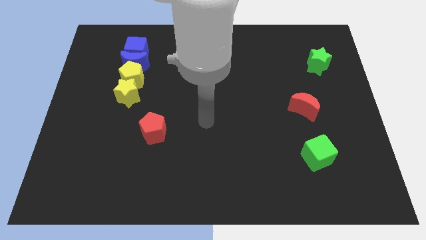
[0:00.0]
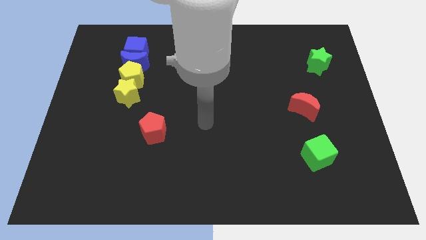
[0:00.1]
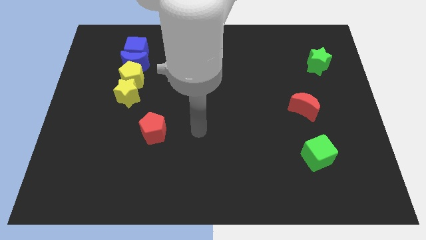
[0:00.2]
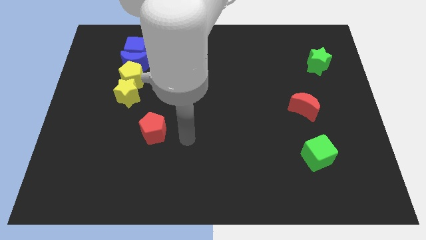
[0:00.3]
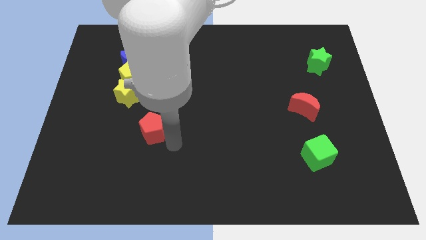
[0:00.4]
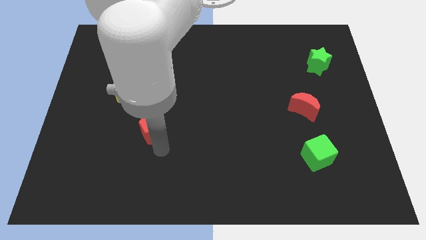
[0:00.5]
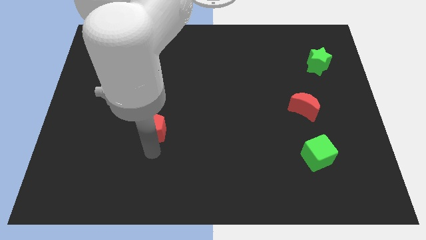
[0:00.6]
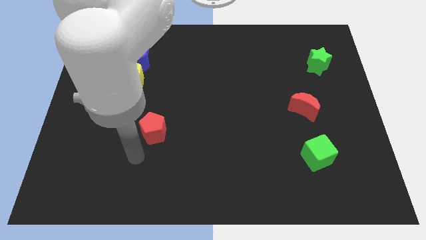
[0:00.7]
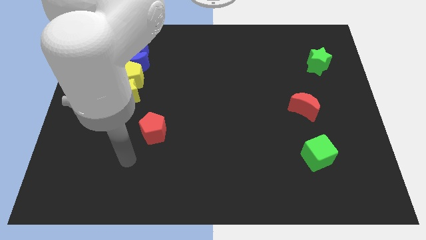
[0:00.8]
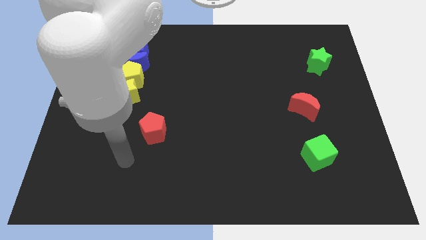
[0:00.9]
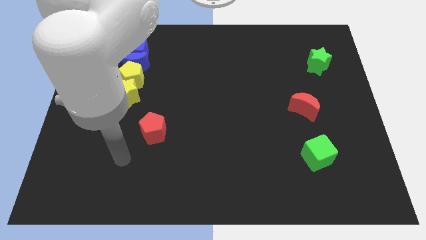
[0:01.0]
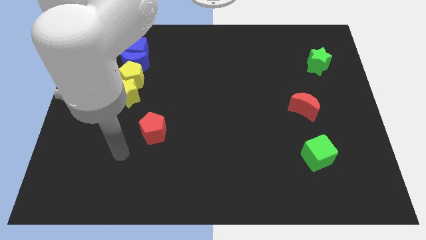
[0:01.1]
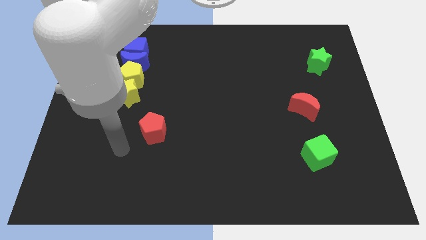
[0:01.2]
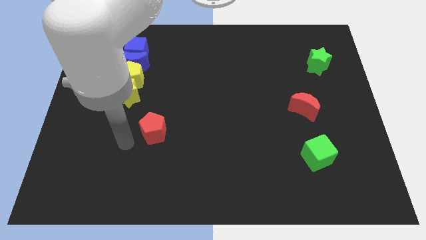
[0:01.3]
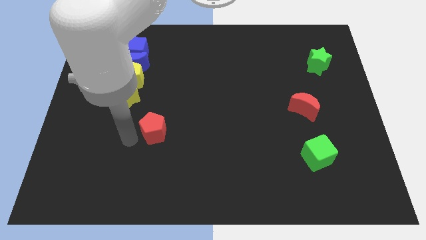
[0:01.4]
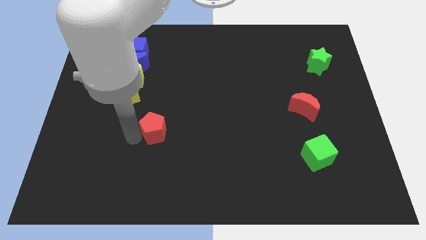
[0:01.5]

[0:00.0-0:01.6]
place your arm at the left of the red pentagon

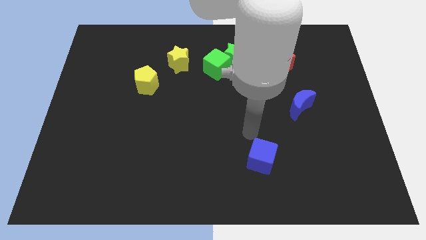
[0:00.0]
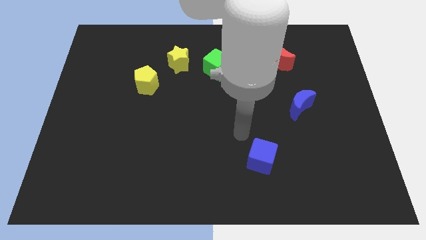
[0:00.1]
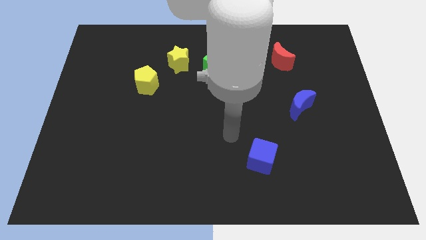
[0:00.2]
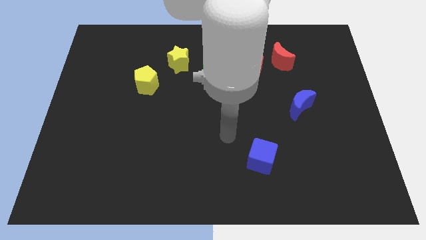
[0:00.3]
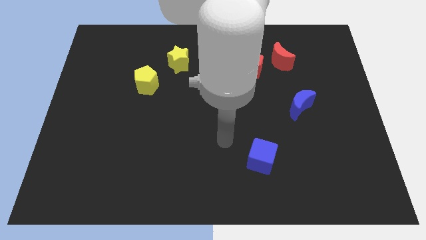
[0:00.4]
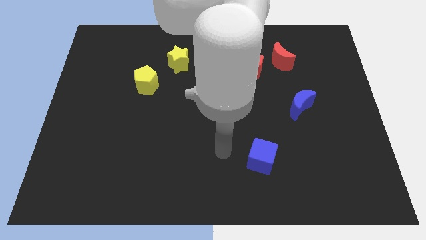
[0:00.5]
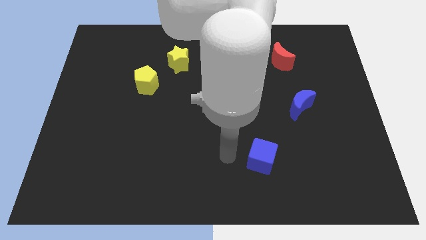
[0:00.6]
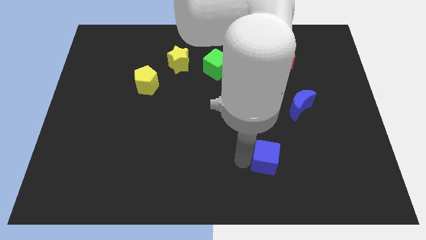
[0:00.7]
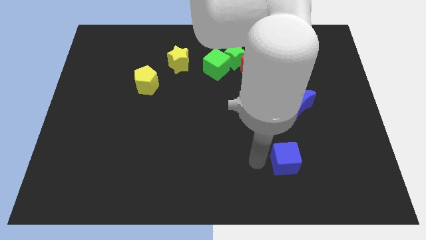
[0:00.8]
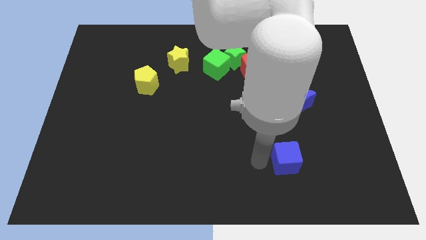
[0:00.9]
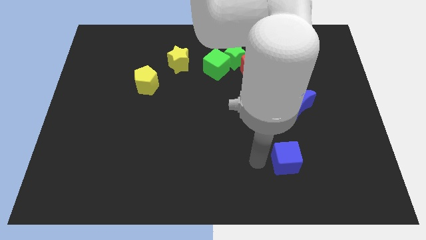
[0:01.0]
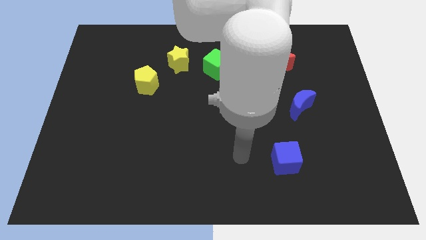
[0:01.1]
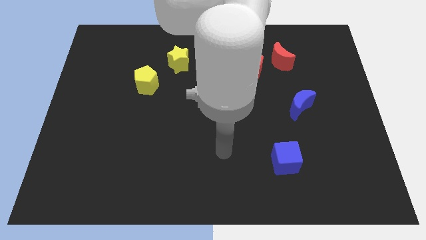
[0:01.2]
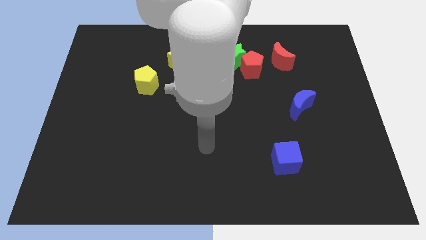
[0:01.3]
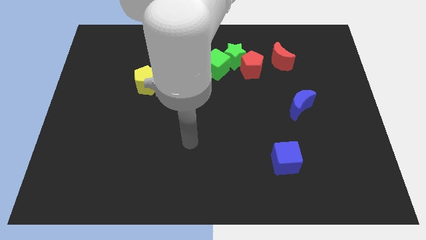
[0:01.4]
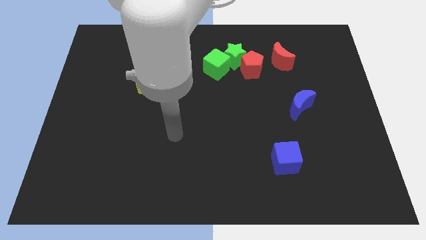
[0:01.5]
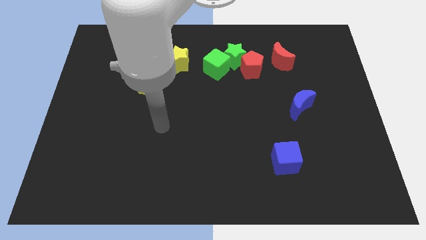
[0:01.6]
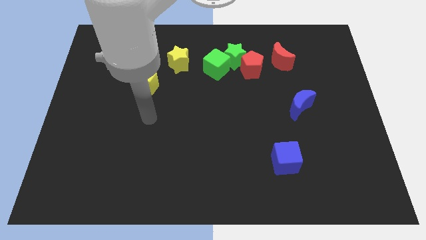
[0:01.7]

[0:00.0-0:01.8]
move blue cube slightly to the right side of the board

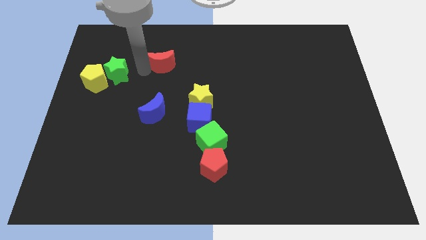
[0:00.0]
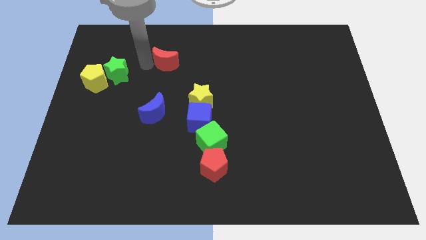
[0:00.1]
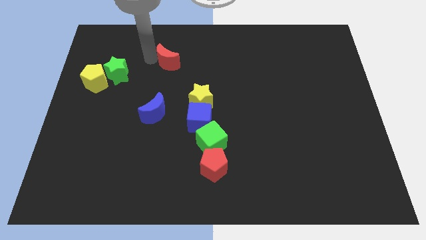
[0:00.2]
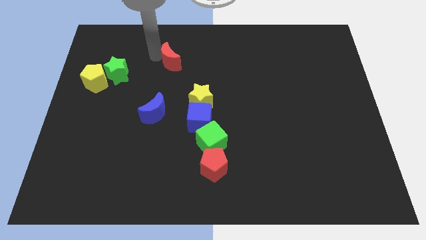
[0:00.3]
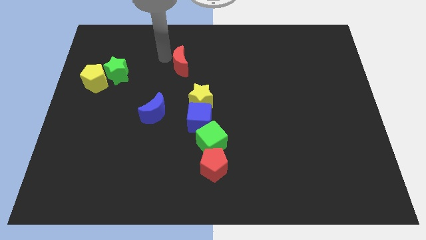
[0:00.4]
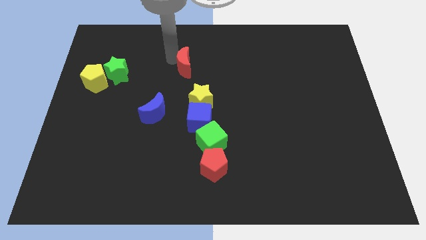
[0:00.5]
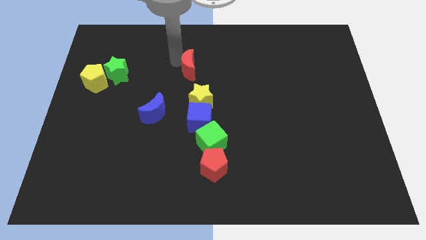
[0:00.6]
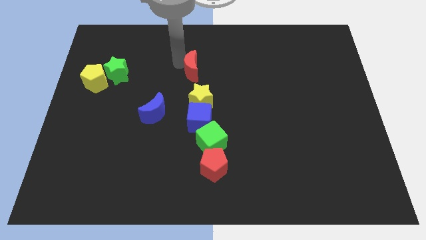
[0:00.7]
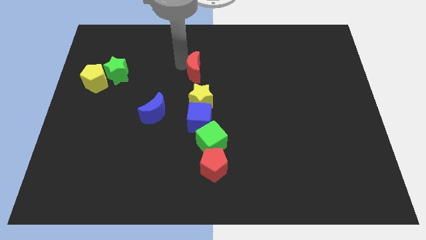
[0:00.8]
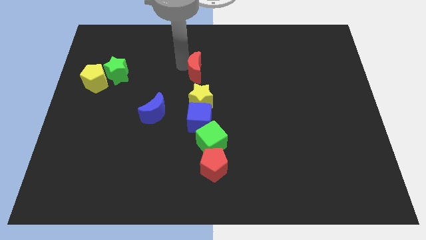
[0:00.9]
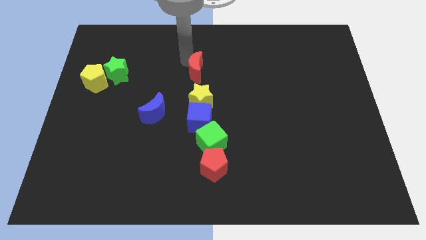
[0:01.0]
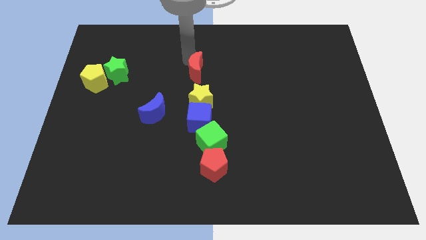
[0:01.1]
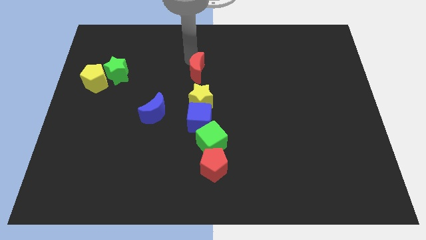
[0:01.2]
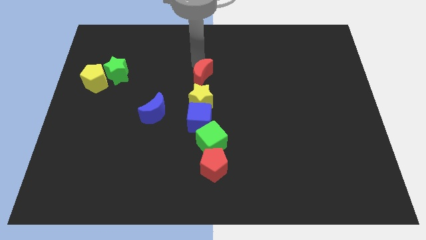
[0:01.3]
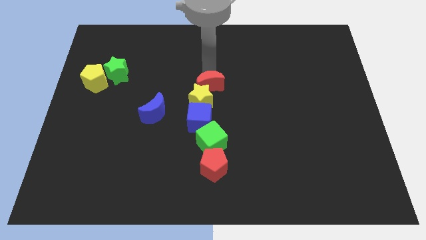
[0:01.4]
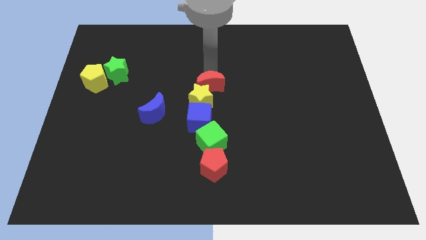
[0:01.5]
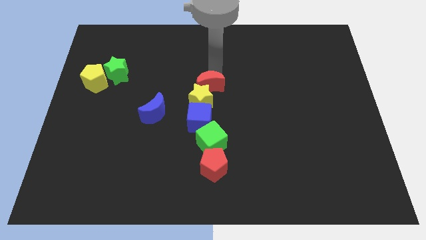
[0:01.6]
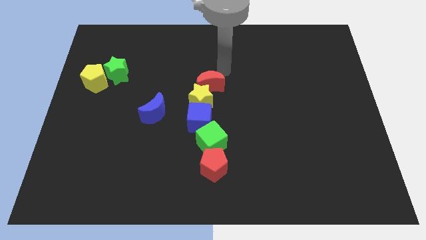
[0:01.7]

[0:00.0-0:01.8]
place the red moon to the top of the yellow star

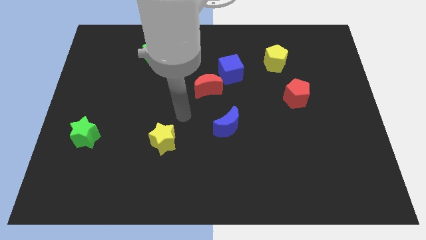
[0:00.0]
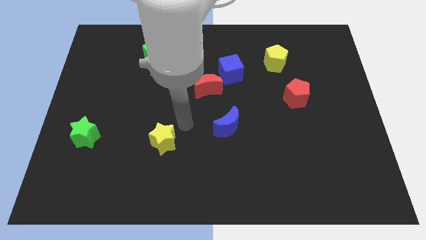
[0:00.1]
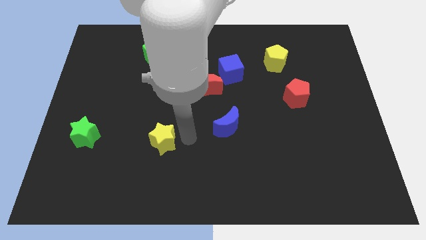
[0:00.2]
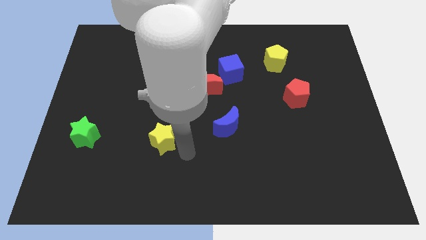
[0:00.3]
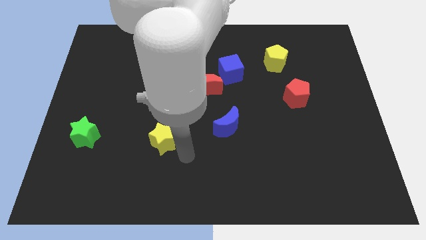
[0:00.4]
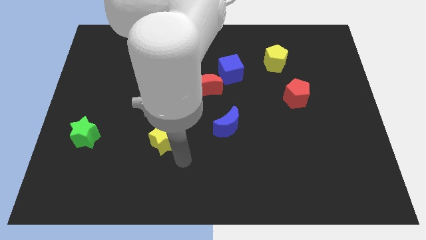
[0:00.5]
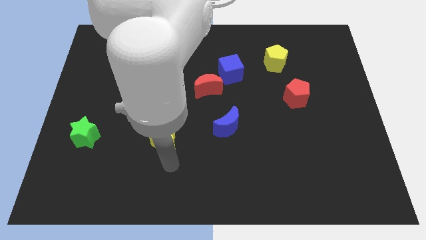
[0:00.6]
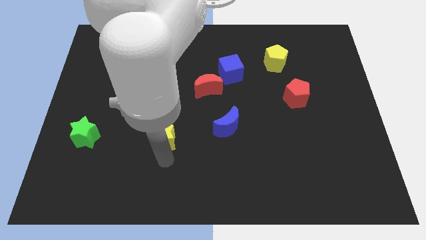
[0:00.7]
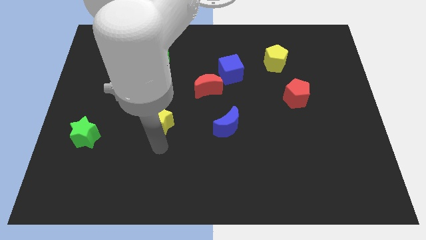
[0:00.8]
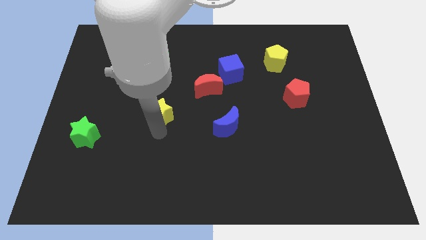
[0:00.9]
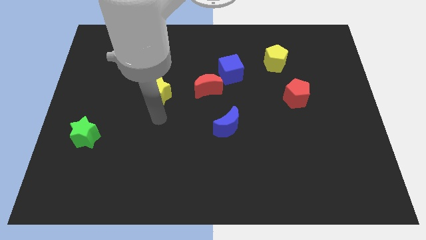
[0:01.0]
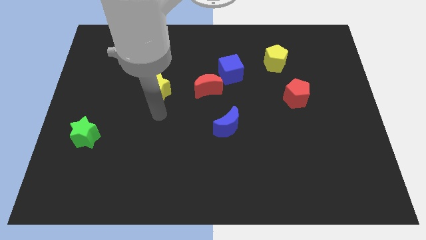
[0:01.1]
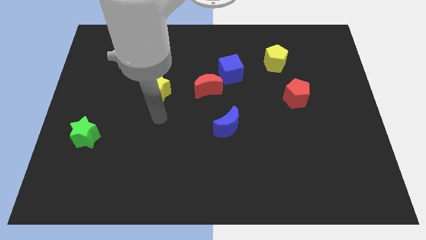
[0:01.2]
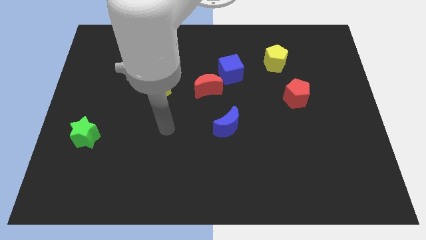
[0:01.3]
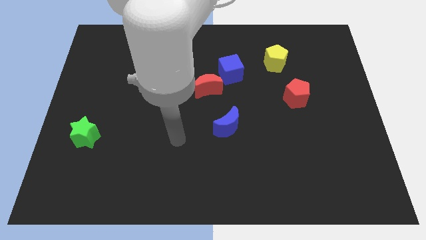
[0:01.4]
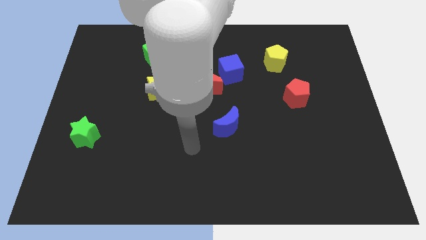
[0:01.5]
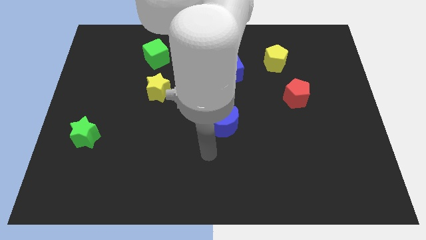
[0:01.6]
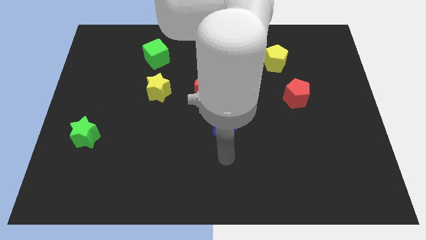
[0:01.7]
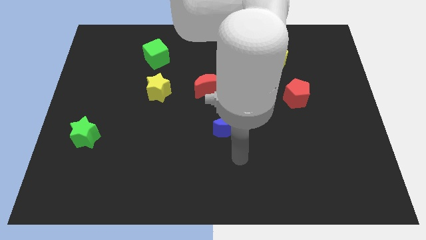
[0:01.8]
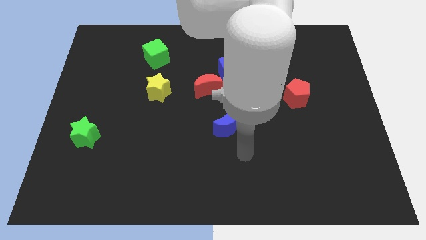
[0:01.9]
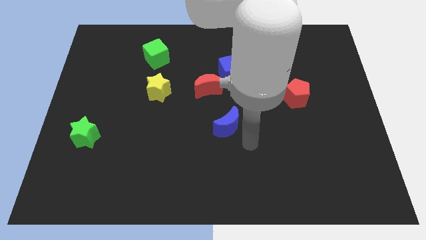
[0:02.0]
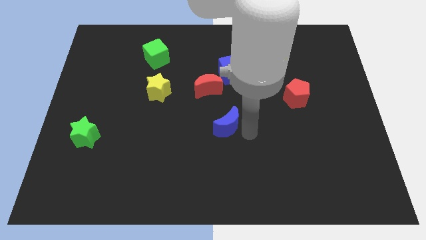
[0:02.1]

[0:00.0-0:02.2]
move the yellow star to the left of the red moon

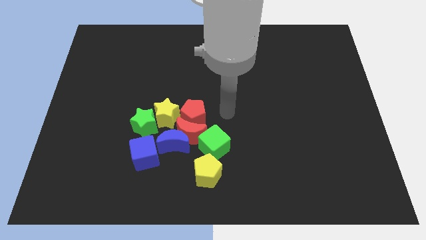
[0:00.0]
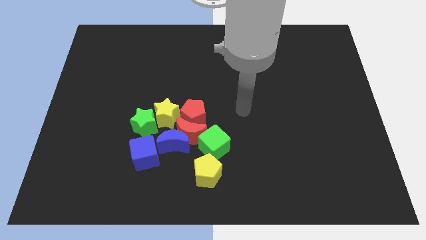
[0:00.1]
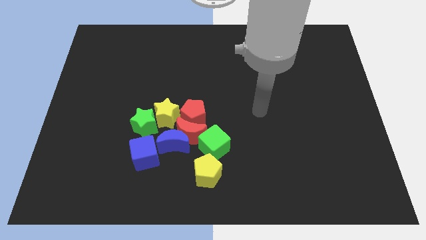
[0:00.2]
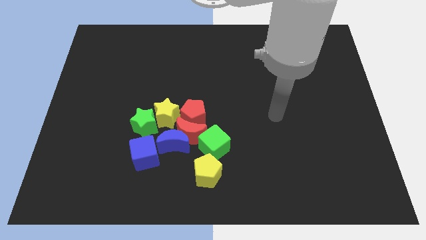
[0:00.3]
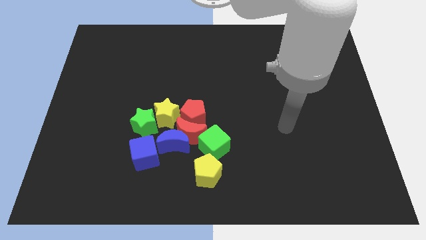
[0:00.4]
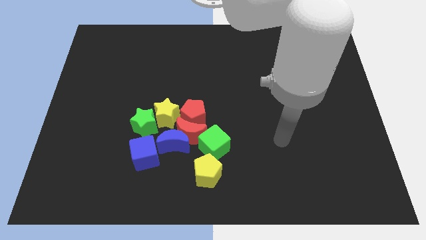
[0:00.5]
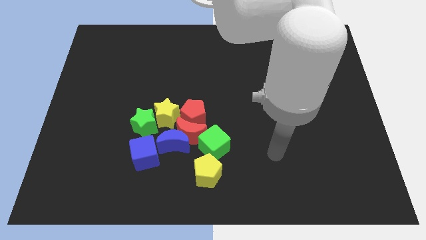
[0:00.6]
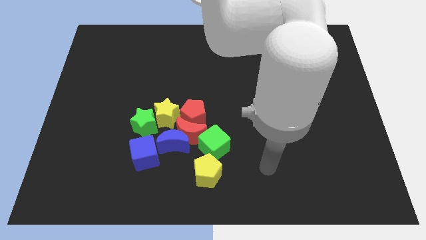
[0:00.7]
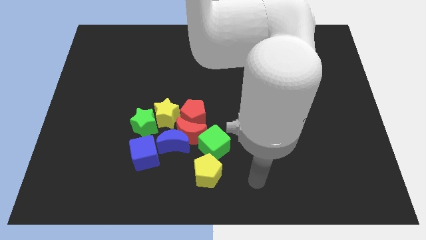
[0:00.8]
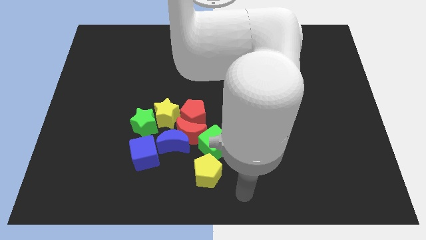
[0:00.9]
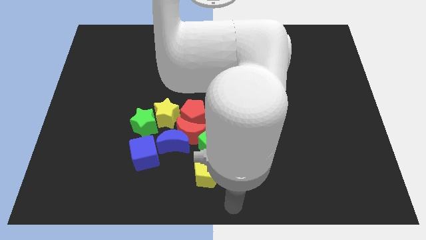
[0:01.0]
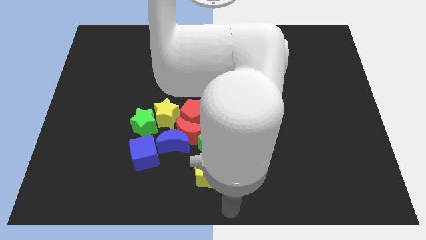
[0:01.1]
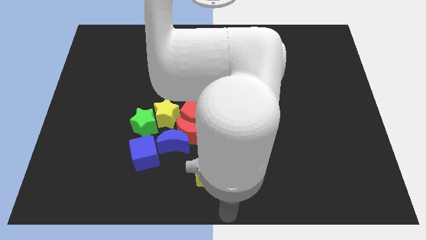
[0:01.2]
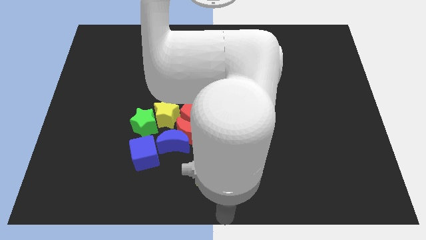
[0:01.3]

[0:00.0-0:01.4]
point your arm at the bottom center of the board
